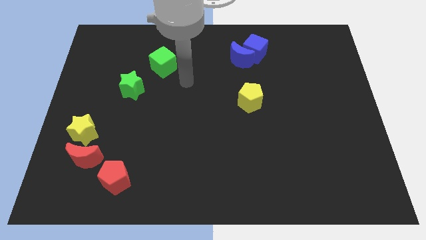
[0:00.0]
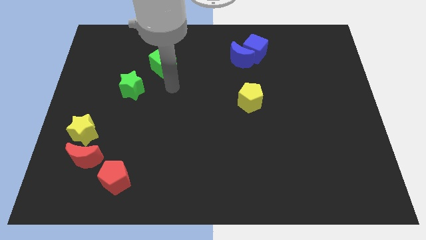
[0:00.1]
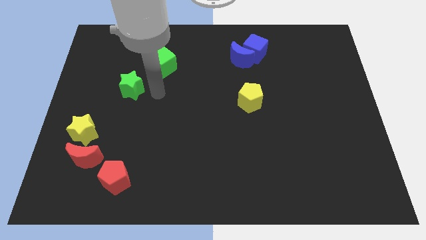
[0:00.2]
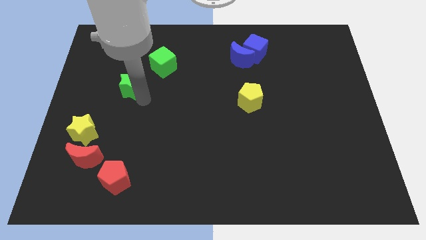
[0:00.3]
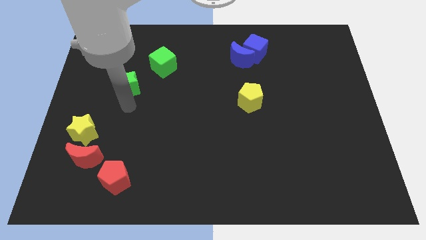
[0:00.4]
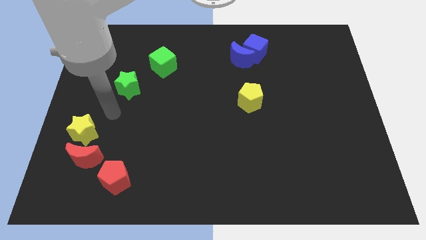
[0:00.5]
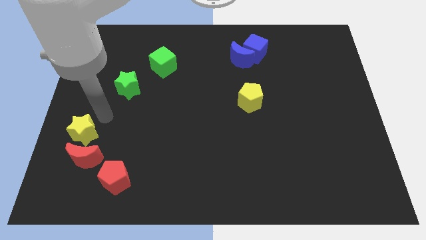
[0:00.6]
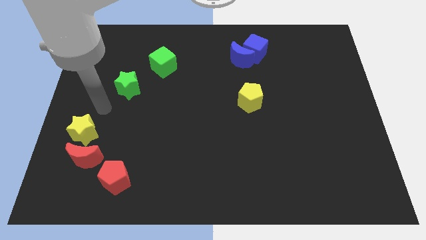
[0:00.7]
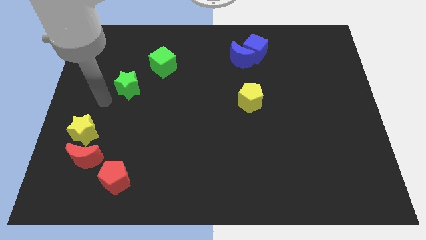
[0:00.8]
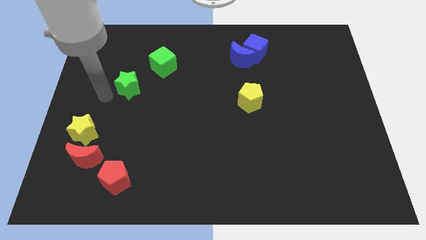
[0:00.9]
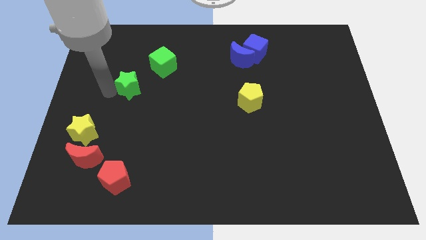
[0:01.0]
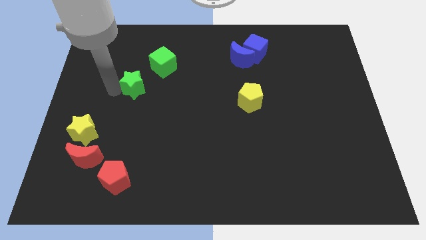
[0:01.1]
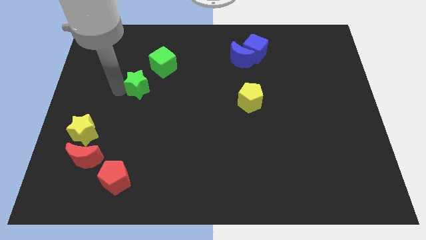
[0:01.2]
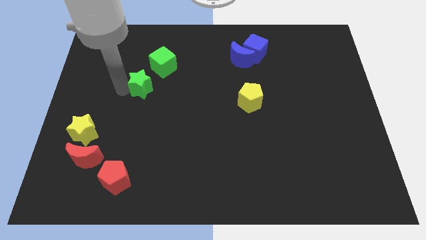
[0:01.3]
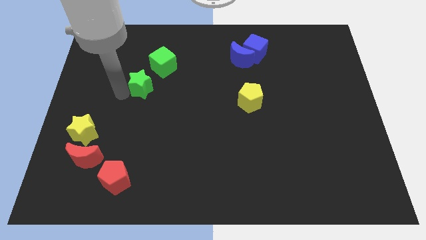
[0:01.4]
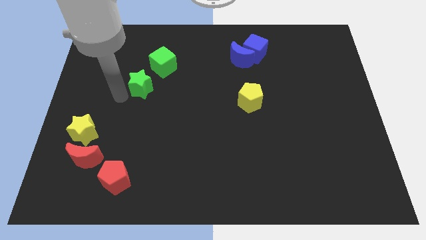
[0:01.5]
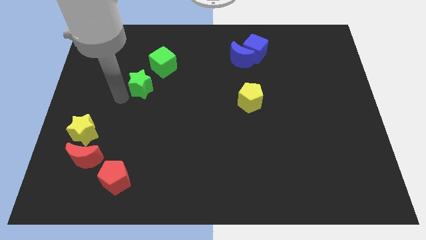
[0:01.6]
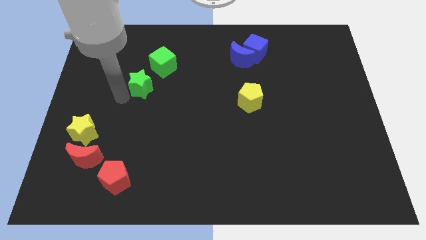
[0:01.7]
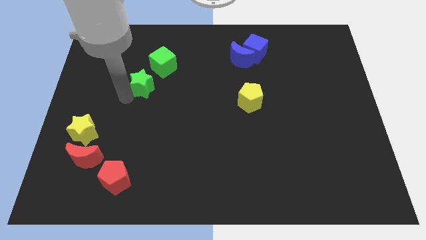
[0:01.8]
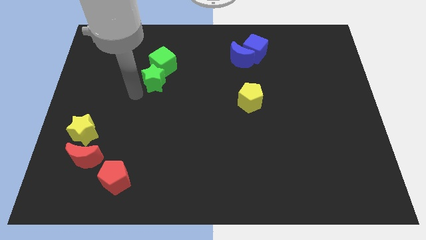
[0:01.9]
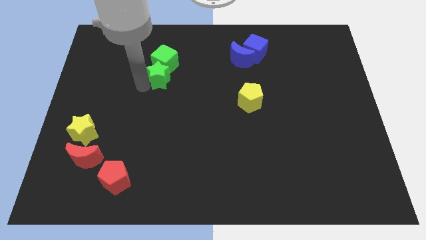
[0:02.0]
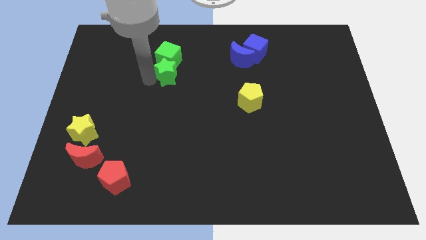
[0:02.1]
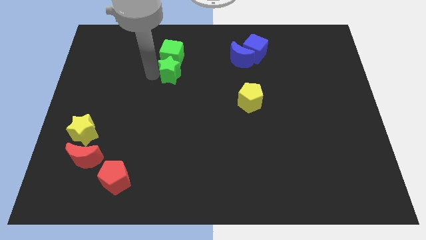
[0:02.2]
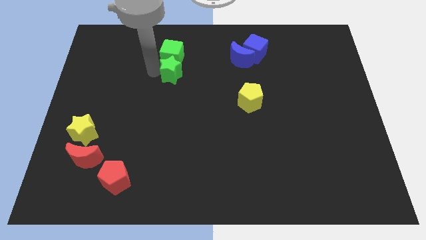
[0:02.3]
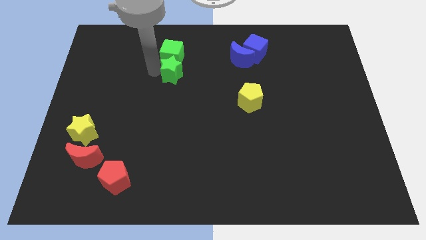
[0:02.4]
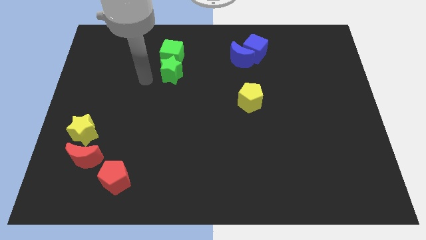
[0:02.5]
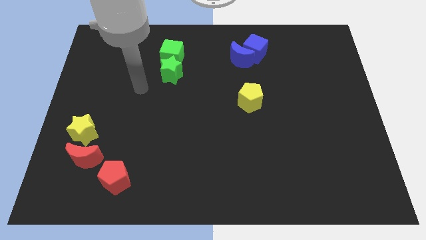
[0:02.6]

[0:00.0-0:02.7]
push green star in to green cube

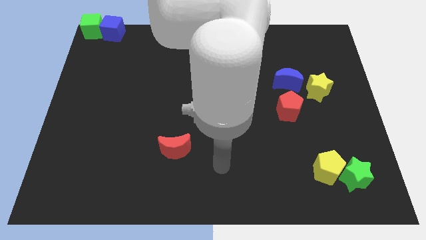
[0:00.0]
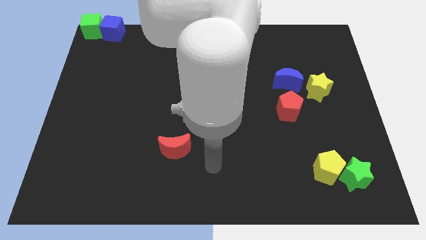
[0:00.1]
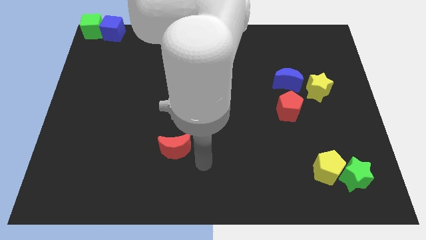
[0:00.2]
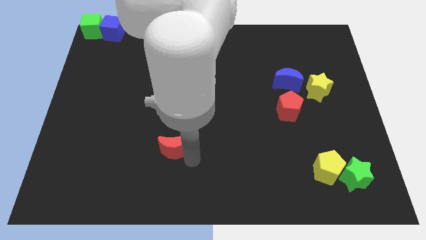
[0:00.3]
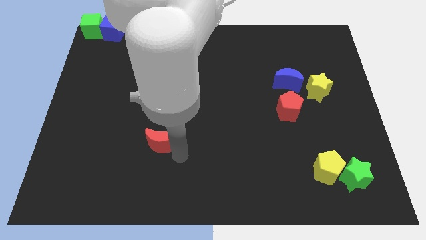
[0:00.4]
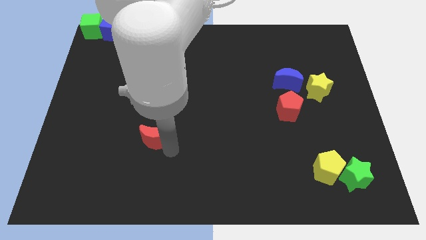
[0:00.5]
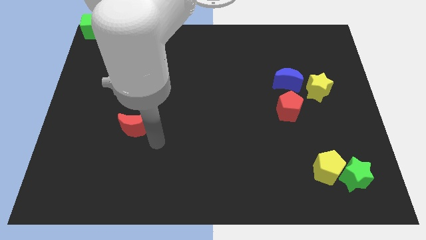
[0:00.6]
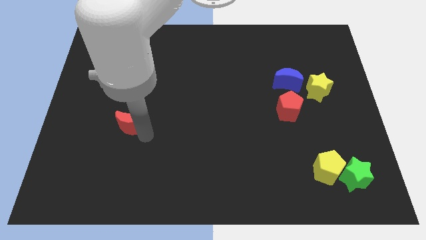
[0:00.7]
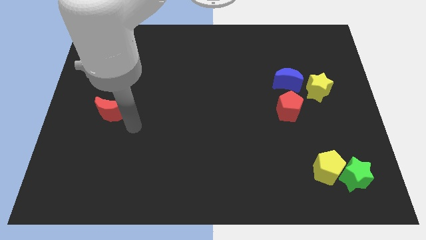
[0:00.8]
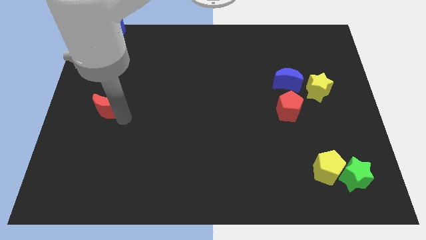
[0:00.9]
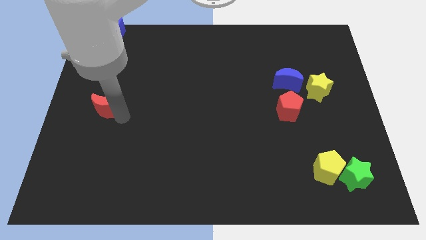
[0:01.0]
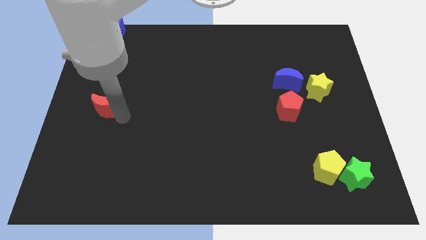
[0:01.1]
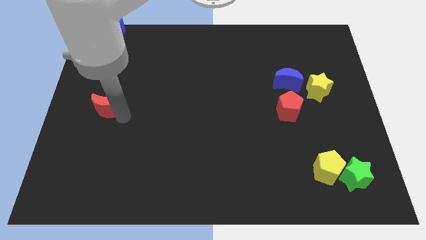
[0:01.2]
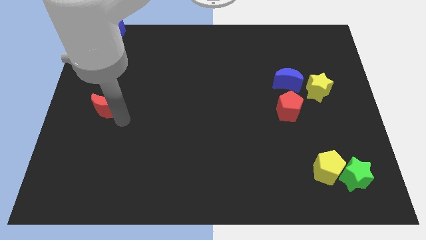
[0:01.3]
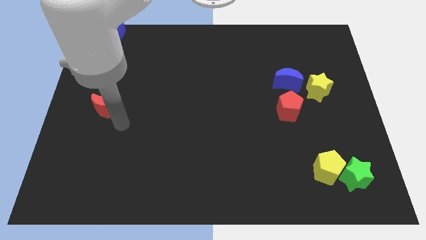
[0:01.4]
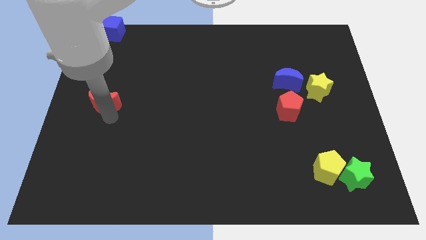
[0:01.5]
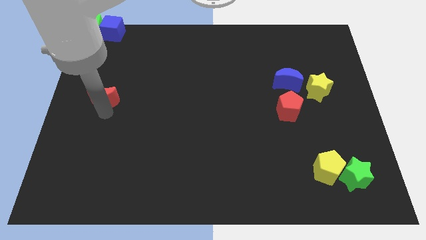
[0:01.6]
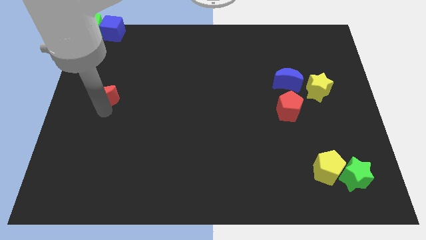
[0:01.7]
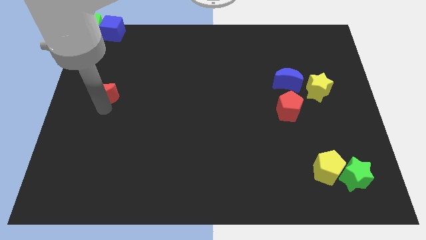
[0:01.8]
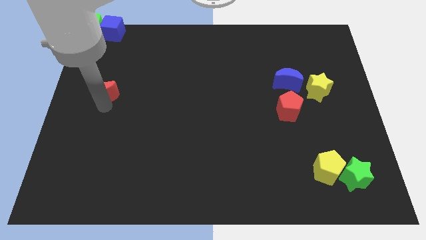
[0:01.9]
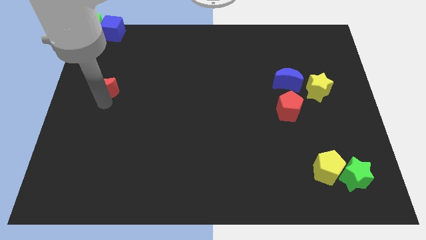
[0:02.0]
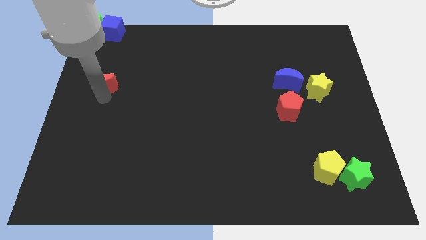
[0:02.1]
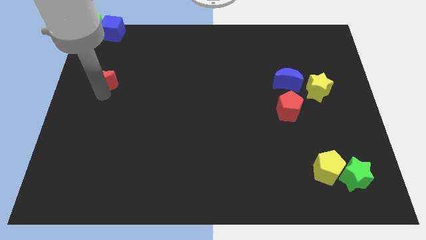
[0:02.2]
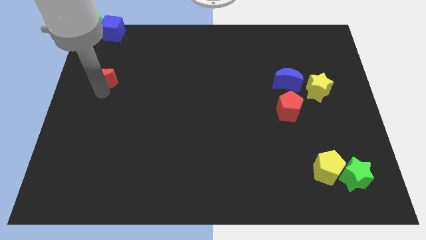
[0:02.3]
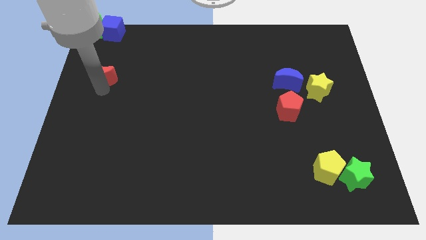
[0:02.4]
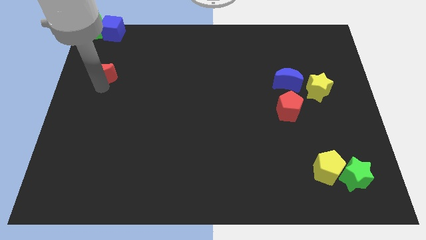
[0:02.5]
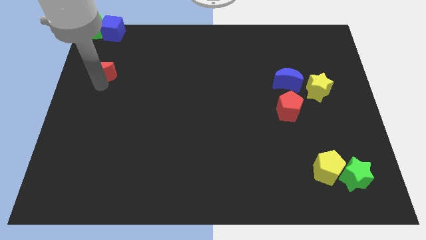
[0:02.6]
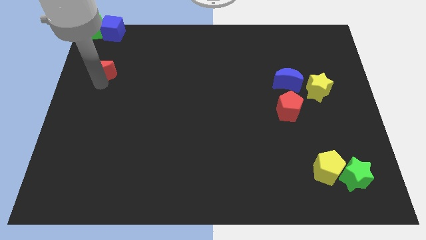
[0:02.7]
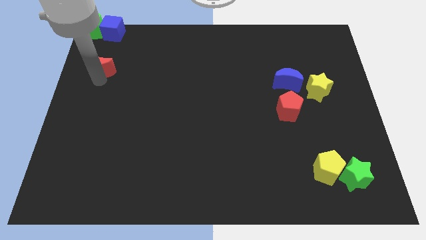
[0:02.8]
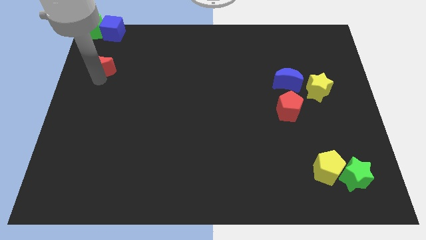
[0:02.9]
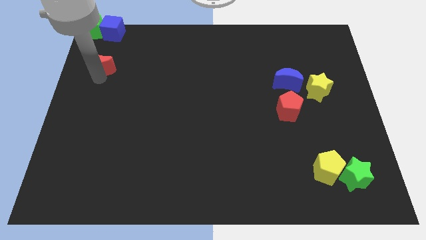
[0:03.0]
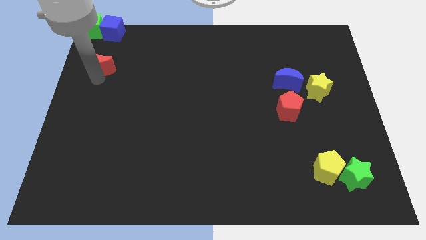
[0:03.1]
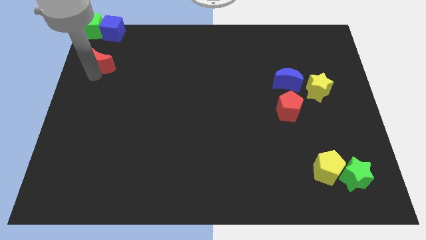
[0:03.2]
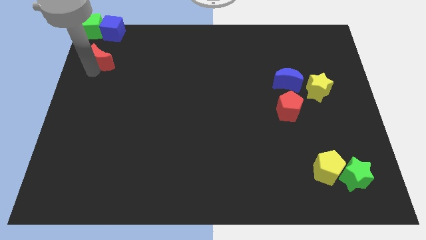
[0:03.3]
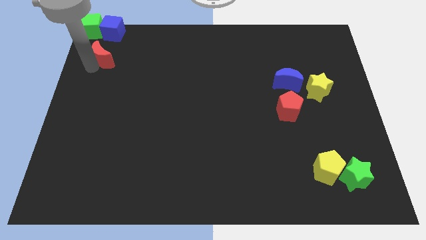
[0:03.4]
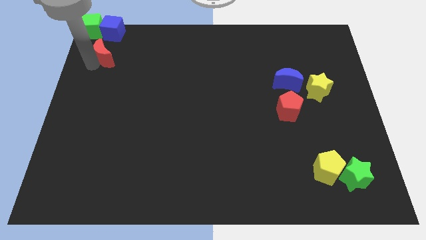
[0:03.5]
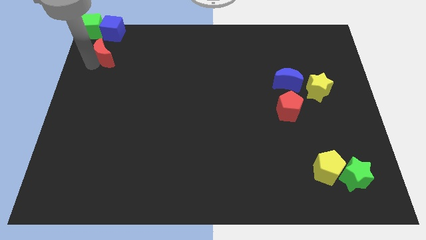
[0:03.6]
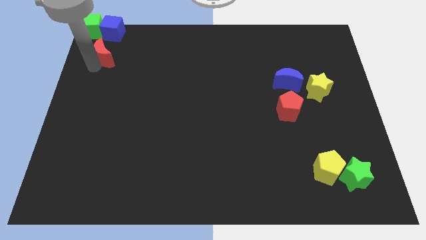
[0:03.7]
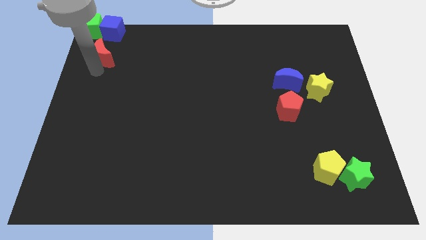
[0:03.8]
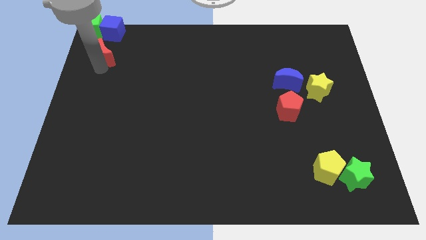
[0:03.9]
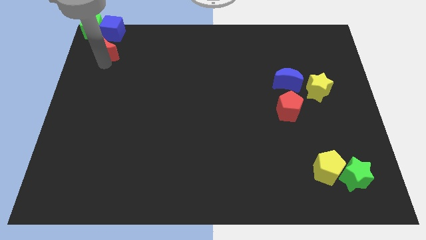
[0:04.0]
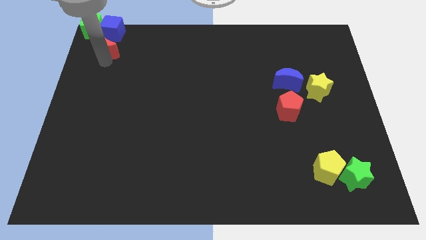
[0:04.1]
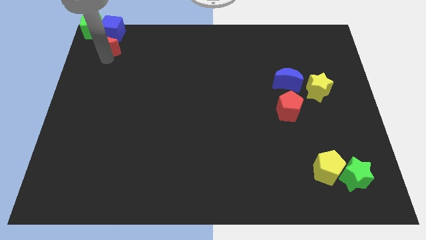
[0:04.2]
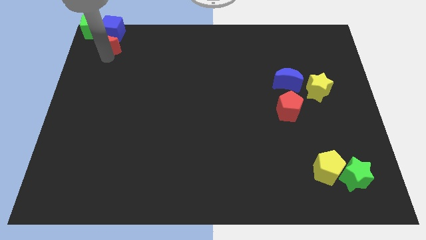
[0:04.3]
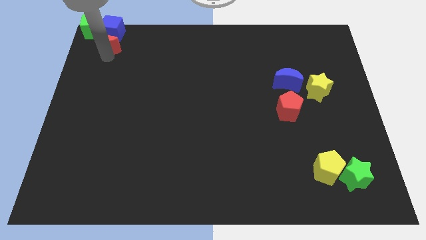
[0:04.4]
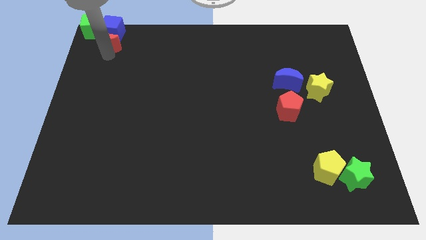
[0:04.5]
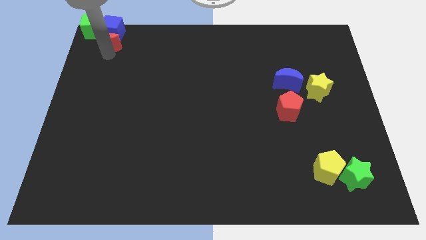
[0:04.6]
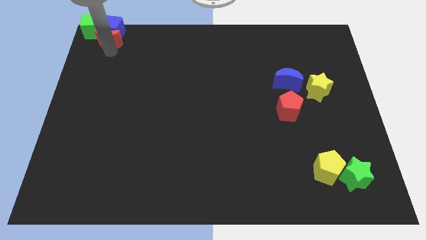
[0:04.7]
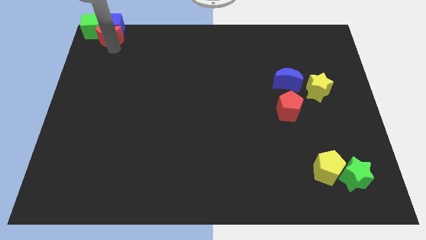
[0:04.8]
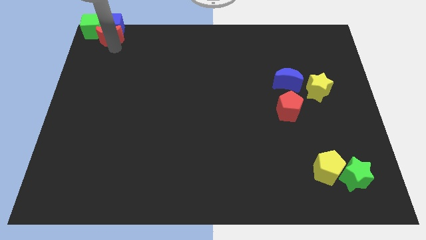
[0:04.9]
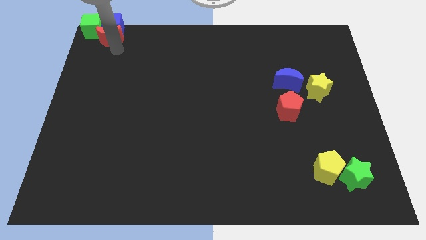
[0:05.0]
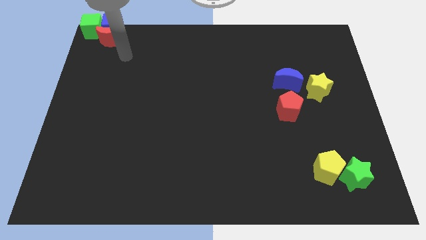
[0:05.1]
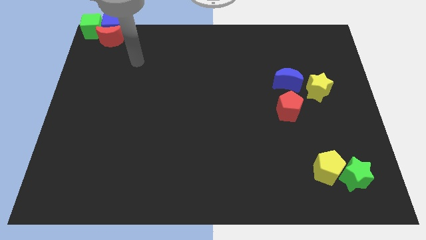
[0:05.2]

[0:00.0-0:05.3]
push the red moon into blue cube

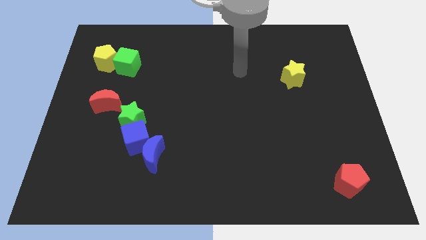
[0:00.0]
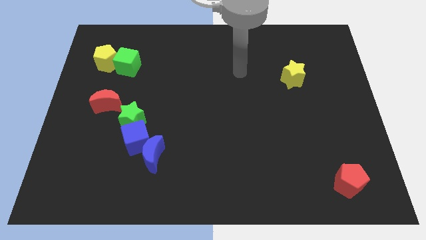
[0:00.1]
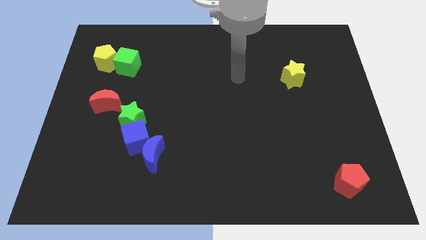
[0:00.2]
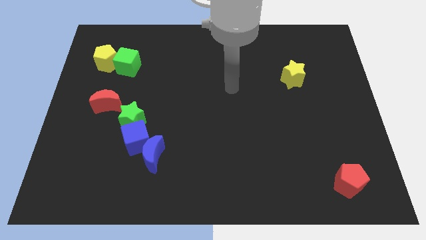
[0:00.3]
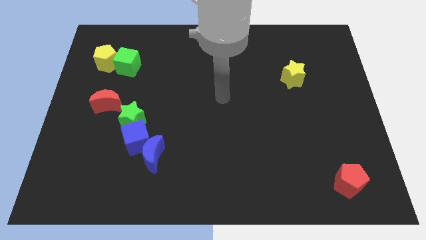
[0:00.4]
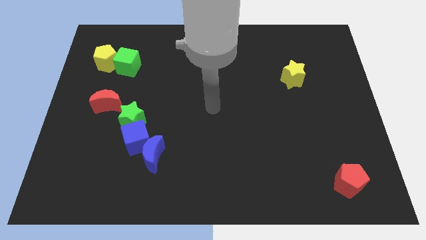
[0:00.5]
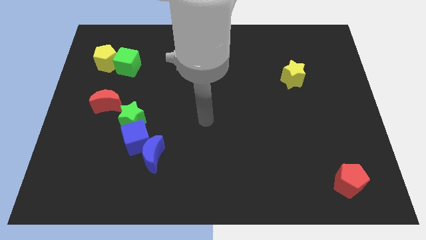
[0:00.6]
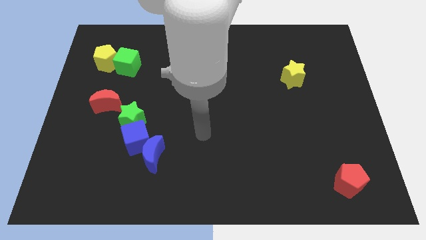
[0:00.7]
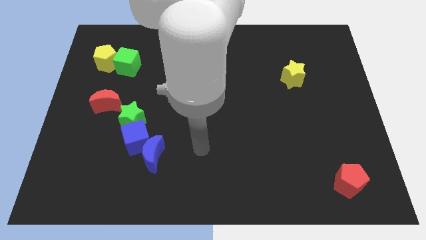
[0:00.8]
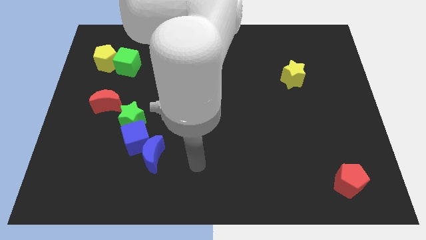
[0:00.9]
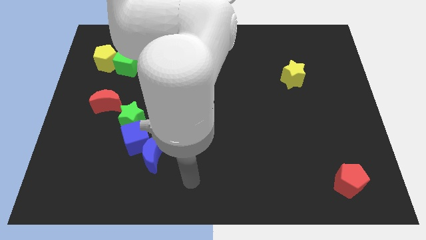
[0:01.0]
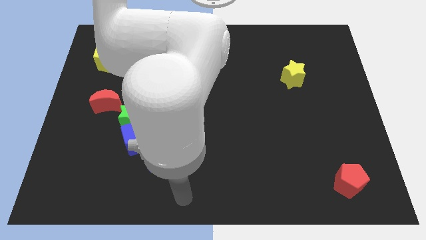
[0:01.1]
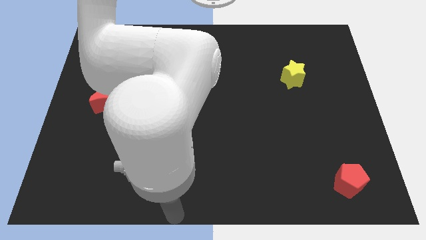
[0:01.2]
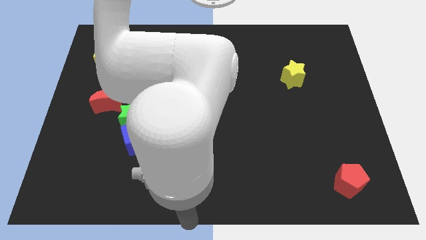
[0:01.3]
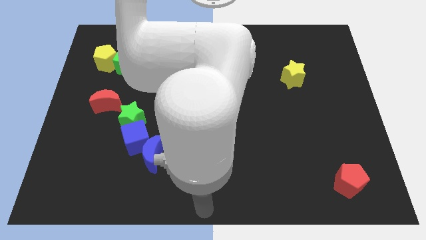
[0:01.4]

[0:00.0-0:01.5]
move your arm towards the bottom center of the board
